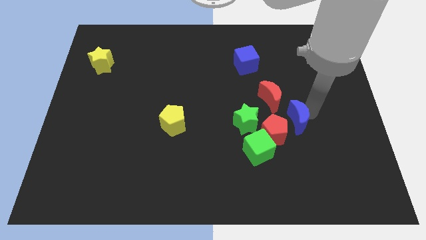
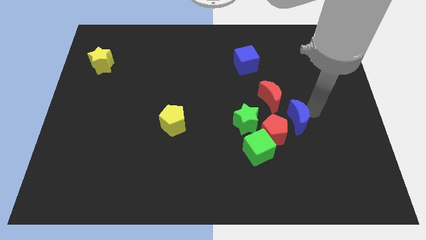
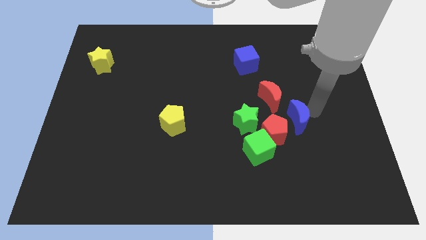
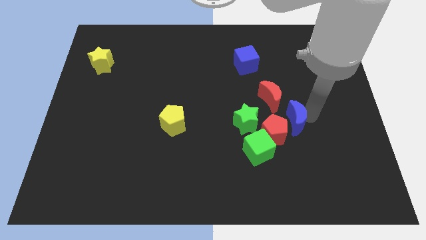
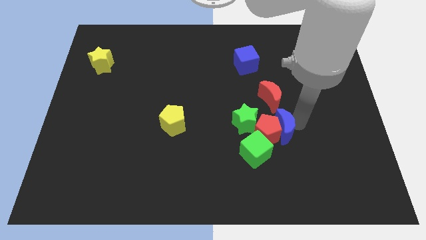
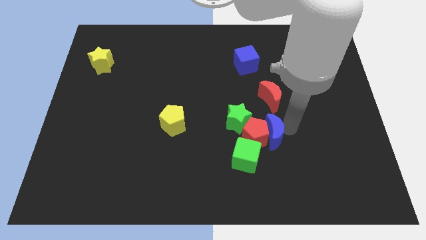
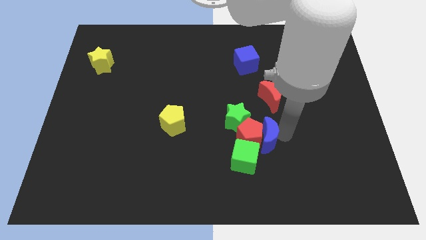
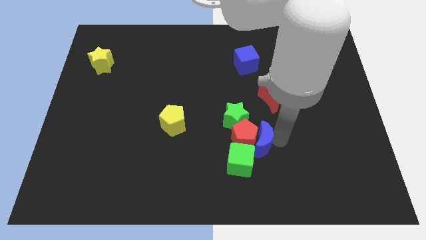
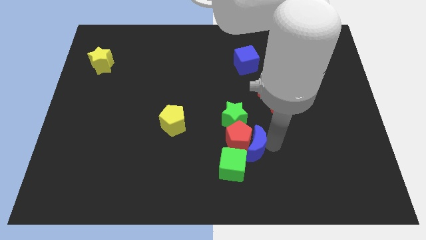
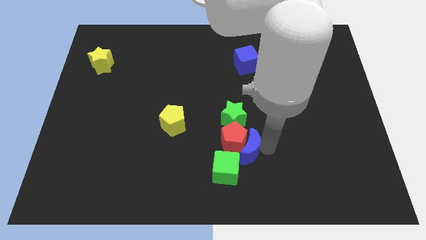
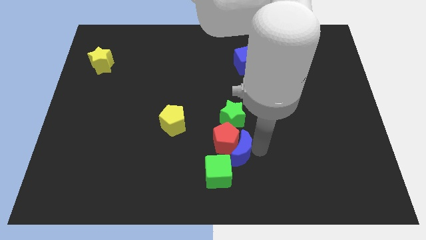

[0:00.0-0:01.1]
push blue crescent into red pentagon

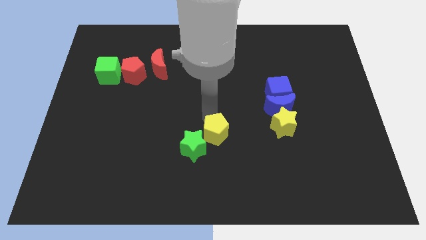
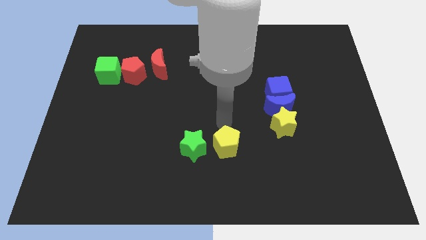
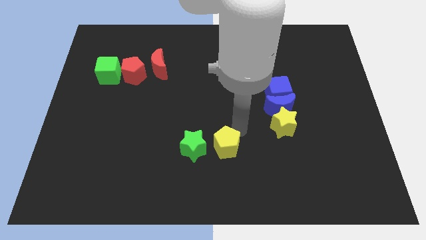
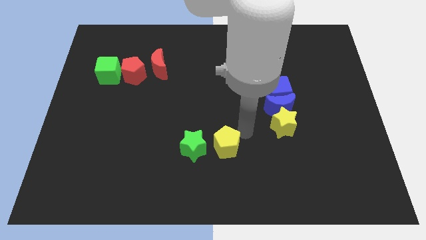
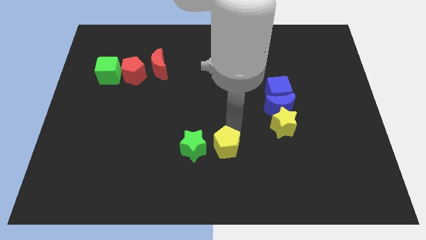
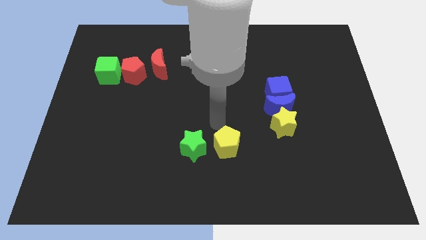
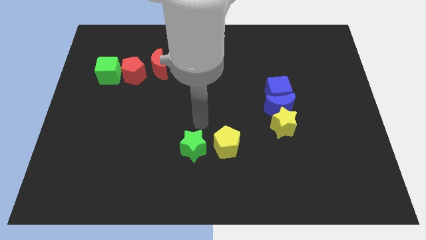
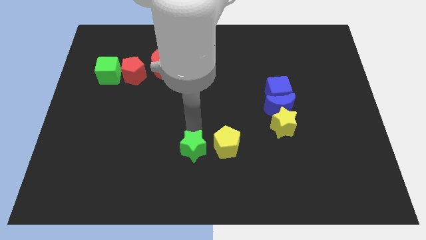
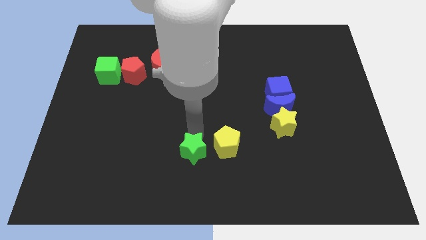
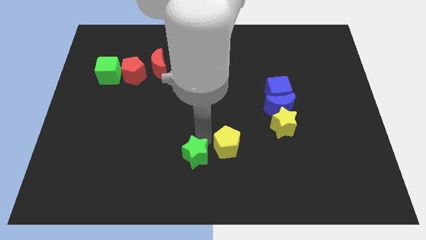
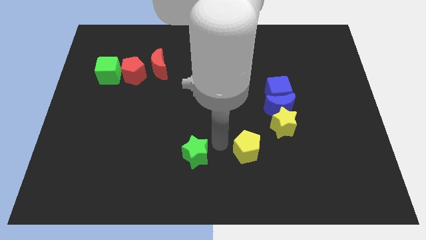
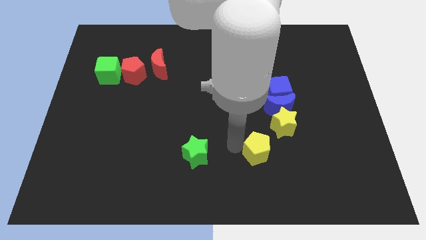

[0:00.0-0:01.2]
move the yellow pentagon parallel right to the green star

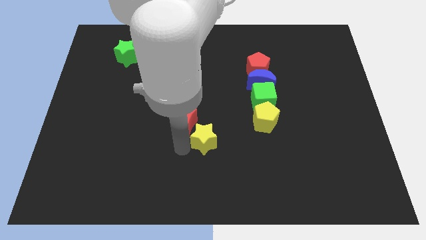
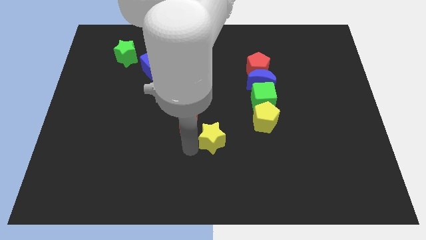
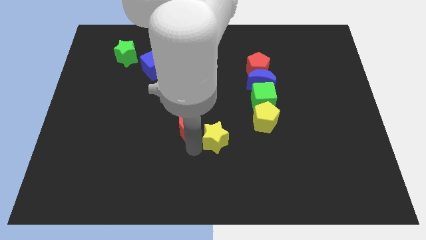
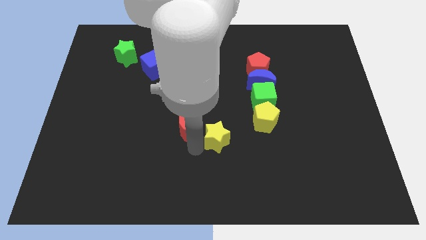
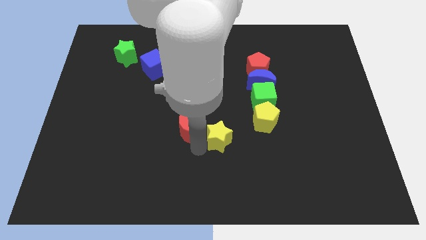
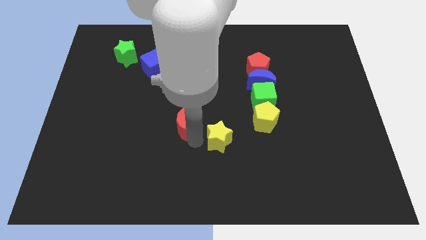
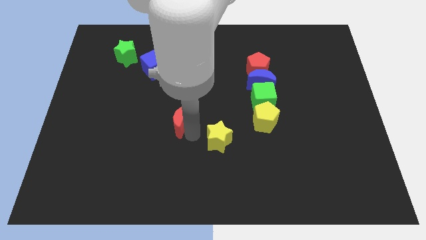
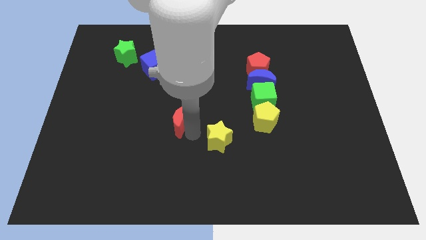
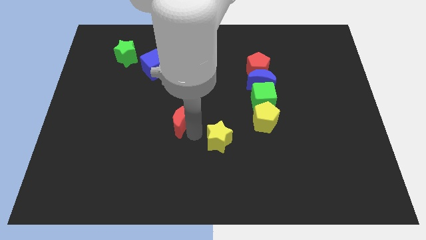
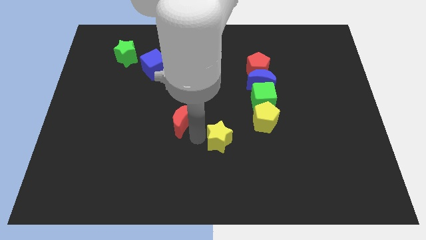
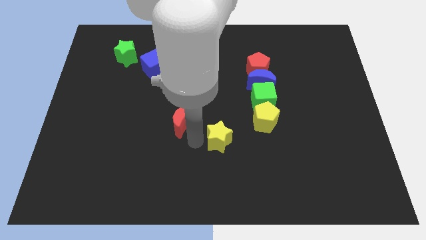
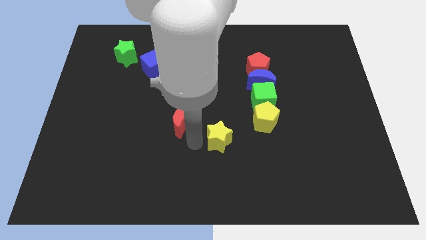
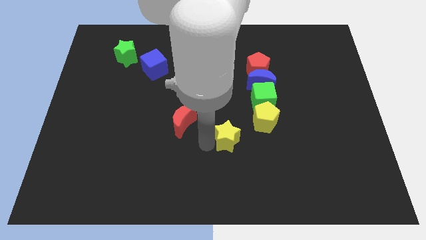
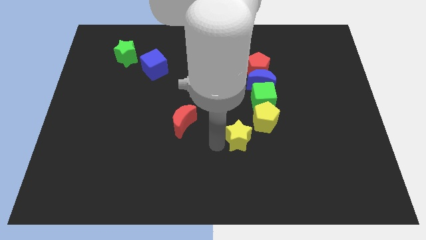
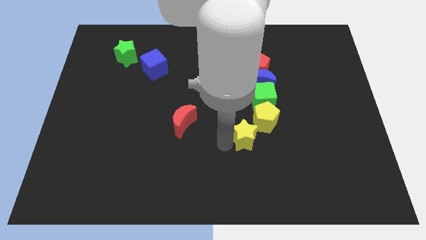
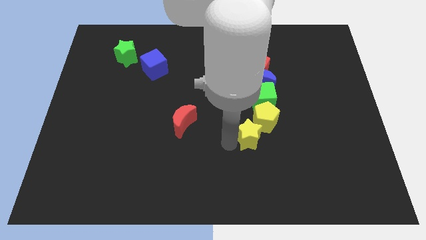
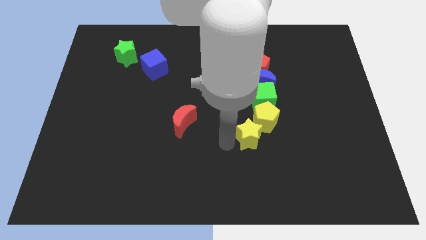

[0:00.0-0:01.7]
separate the yellow star from the red crescent

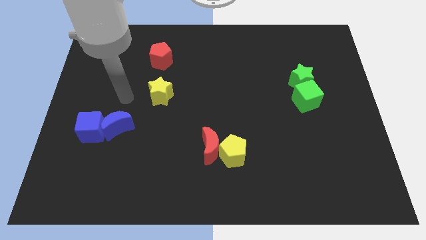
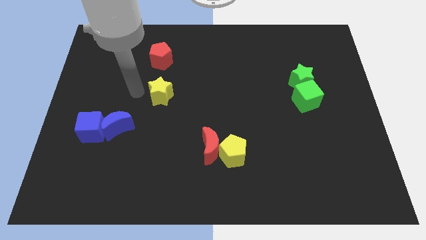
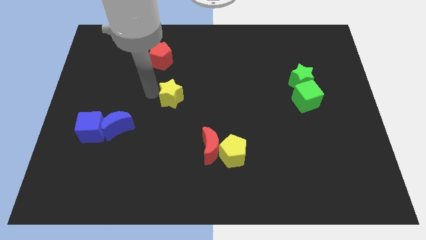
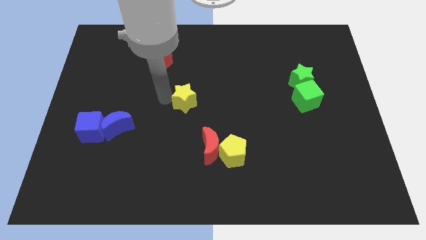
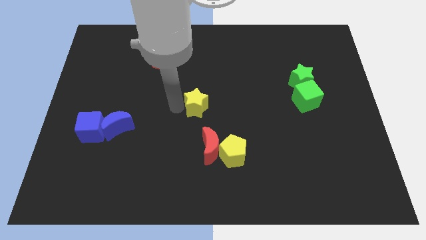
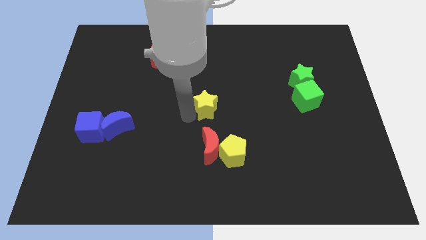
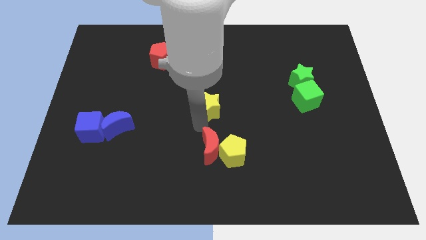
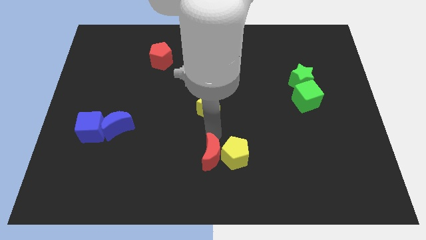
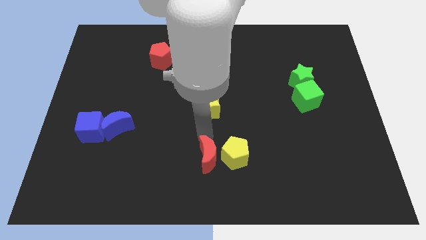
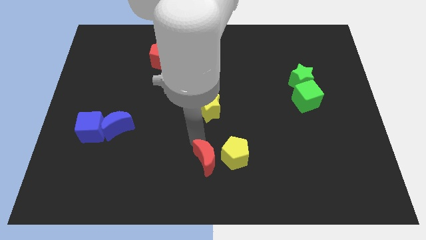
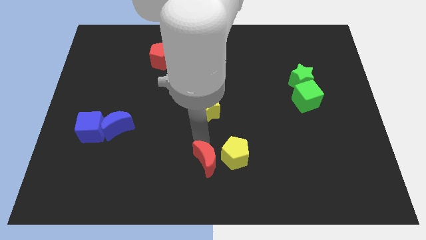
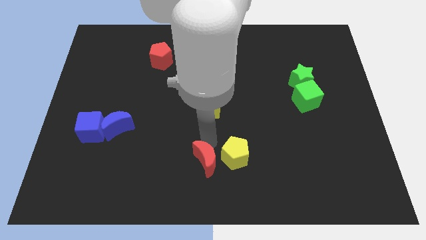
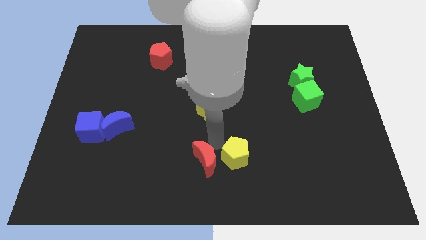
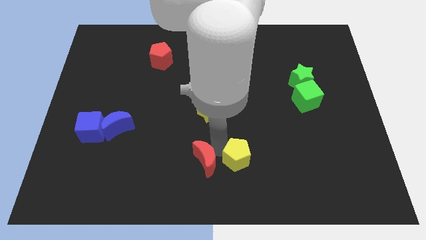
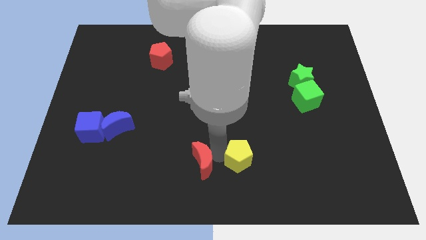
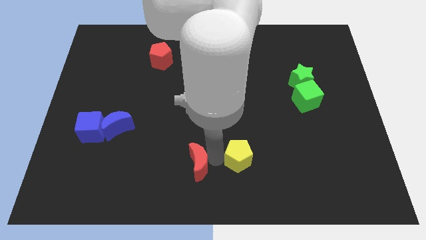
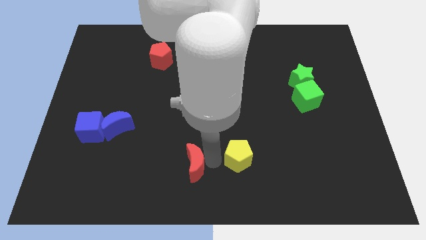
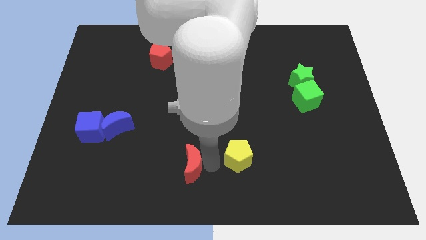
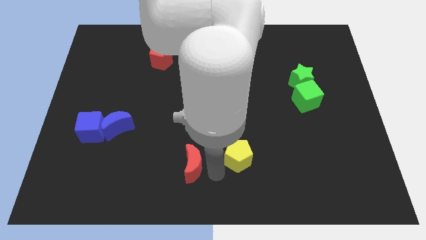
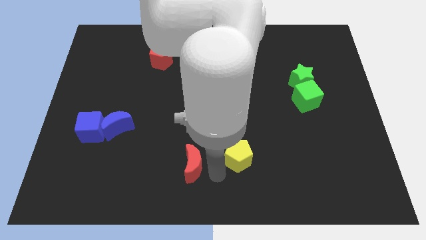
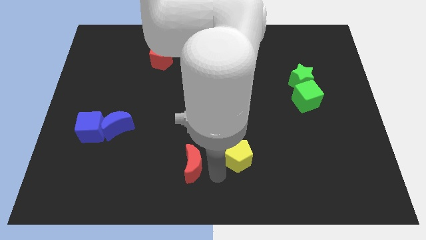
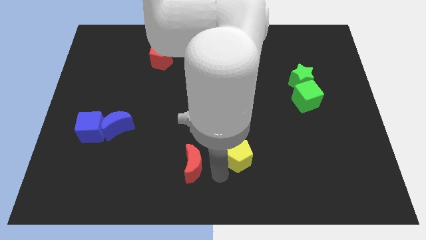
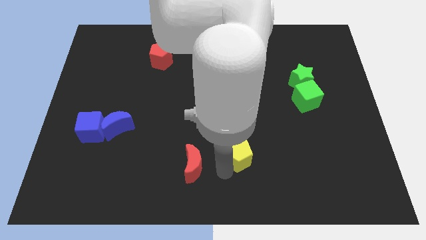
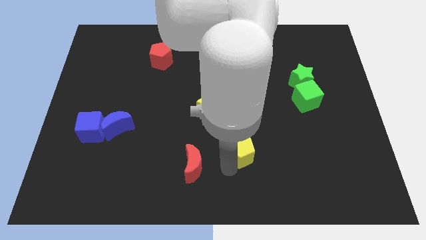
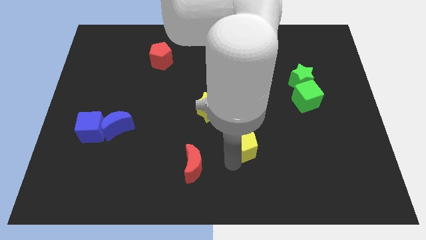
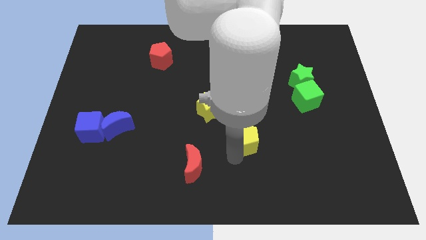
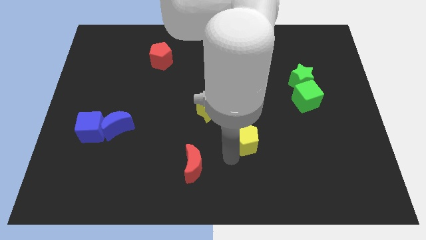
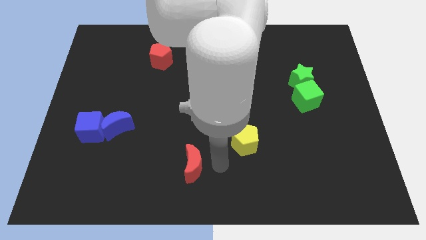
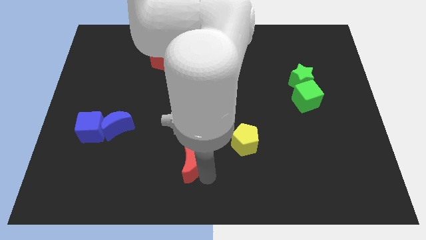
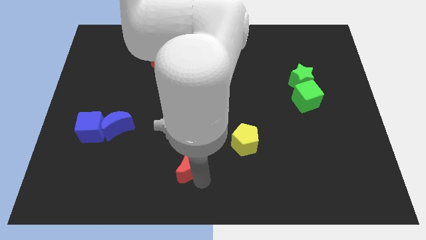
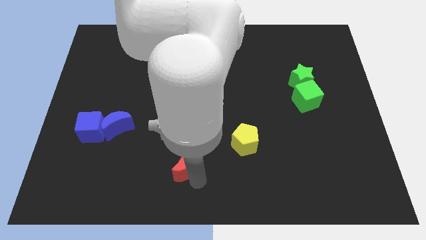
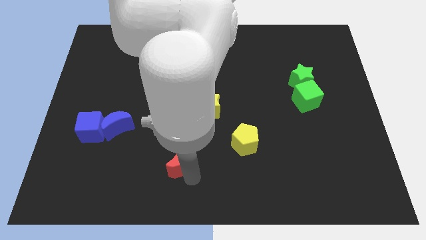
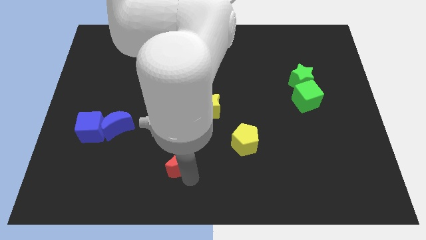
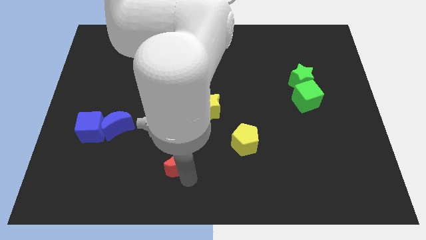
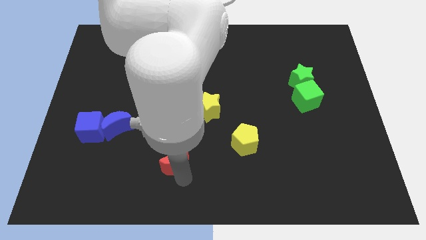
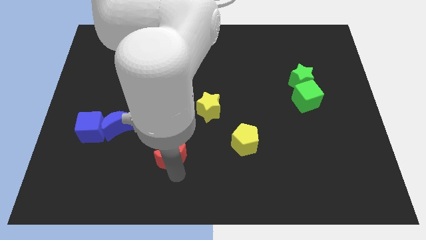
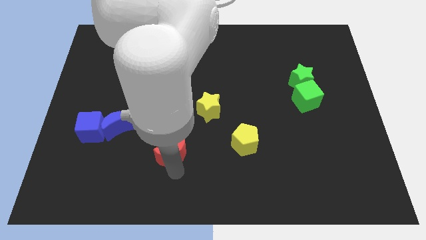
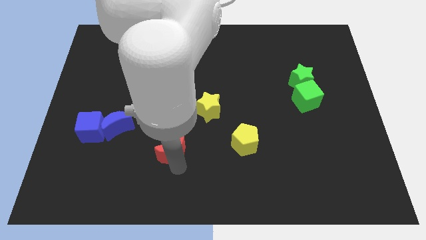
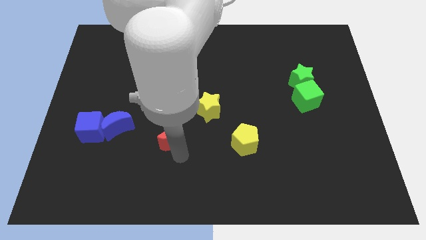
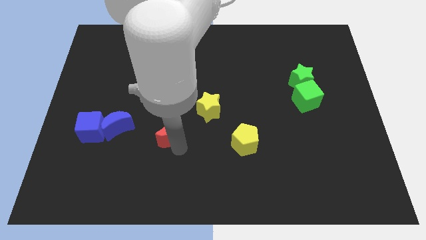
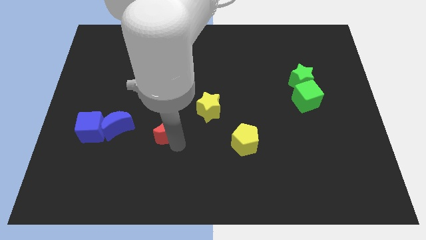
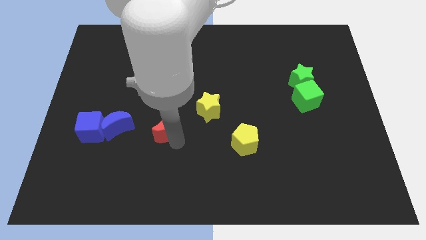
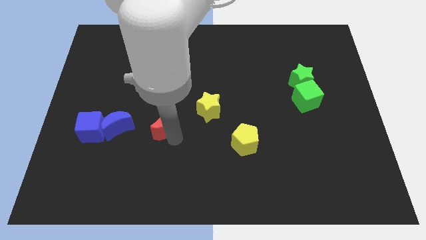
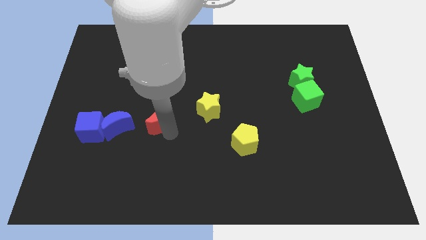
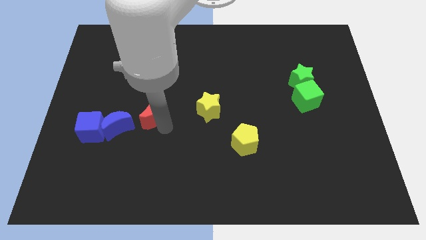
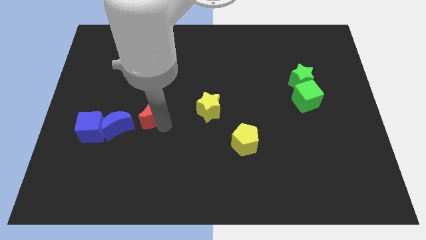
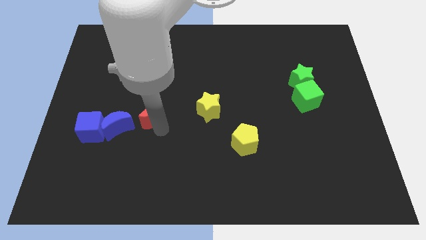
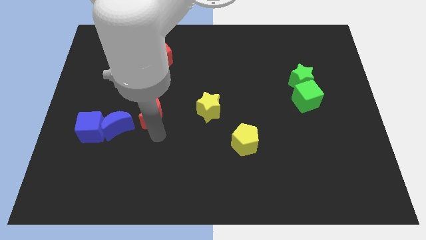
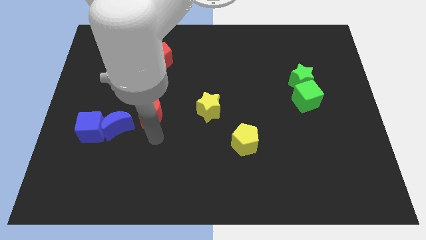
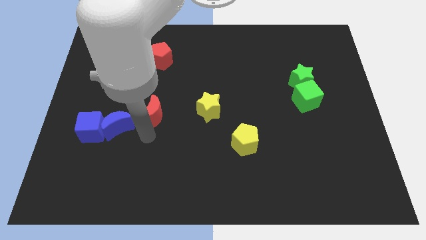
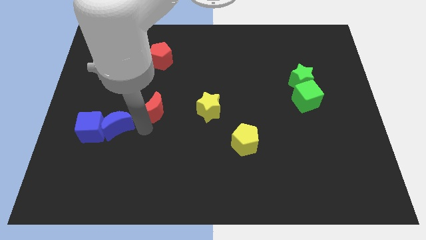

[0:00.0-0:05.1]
place the red crescent to the right of the blue crescent
